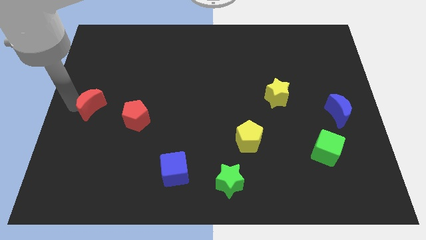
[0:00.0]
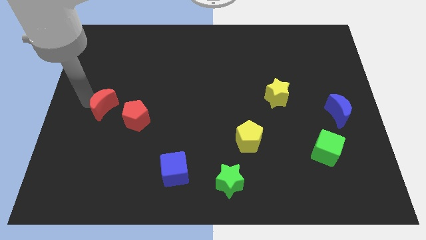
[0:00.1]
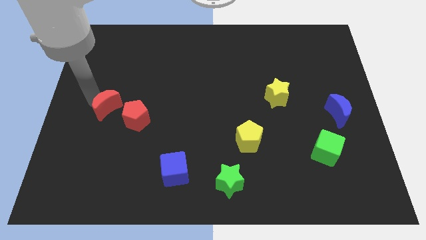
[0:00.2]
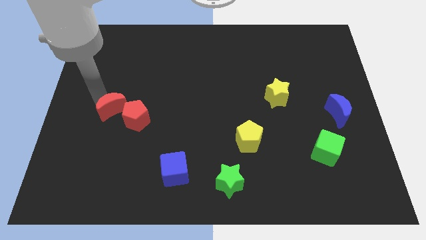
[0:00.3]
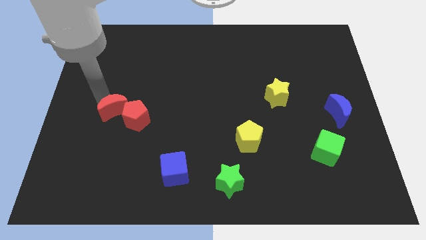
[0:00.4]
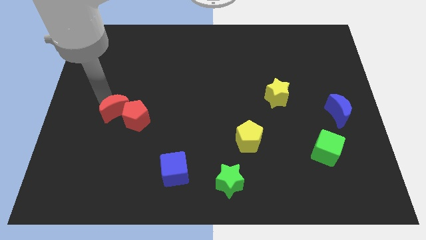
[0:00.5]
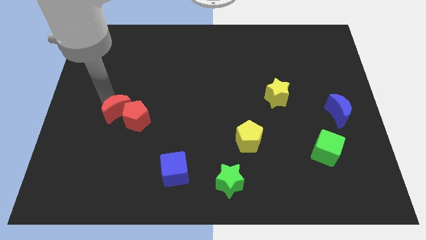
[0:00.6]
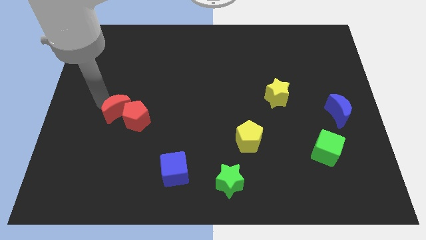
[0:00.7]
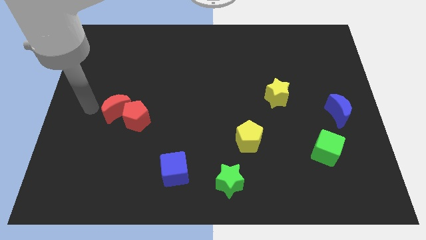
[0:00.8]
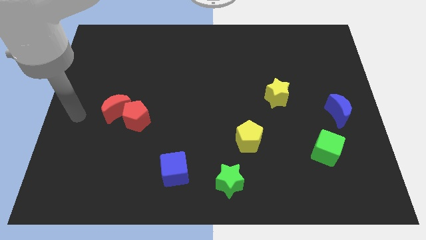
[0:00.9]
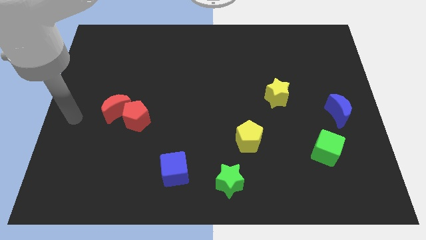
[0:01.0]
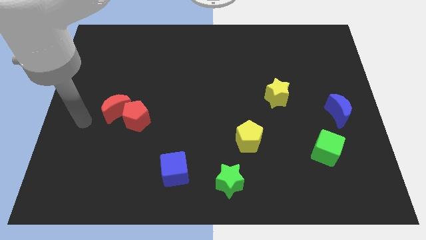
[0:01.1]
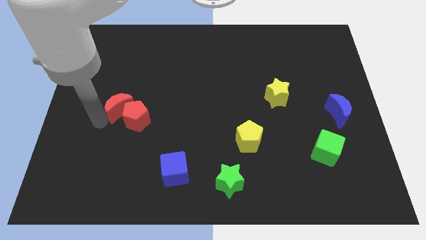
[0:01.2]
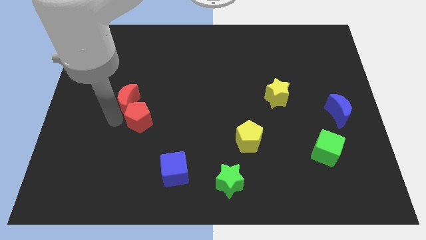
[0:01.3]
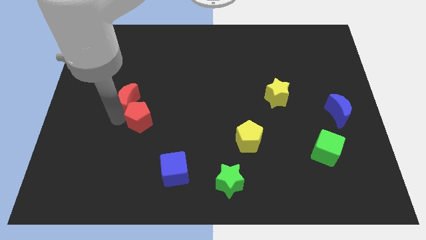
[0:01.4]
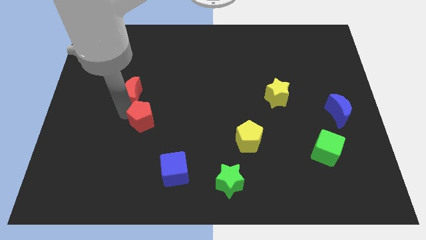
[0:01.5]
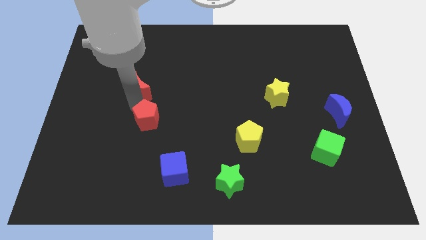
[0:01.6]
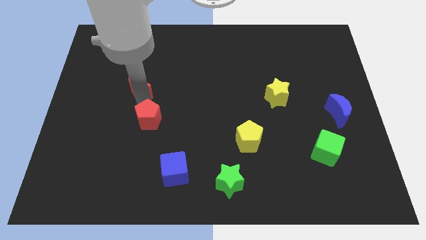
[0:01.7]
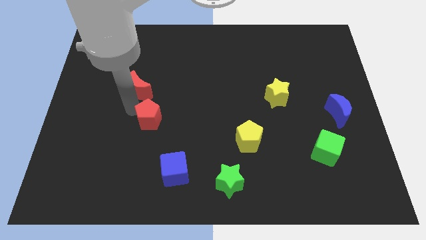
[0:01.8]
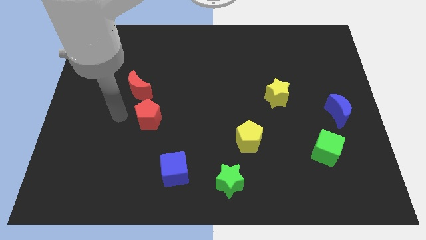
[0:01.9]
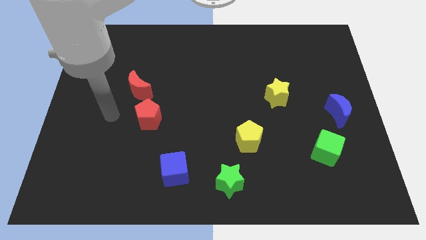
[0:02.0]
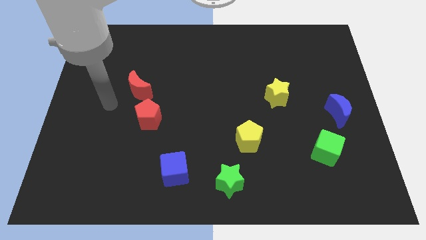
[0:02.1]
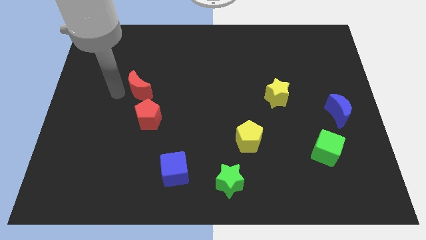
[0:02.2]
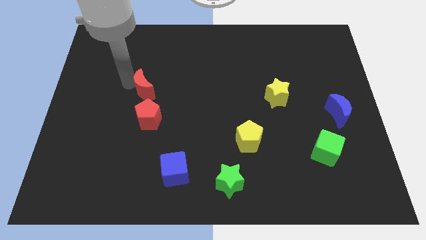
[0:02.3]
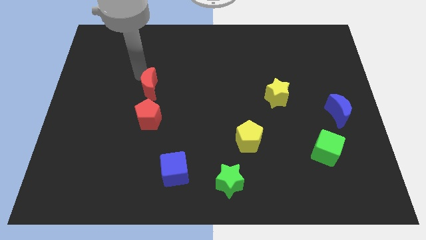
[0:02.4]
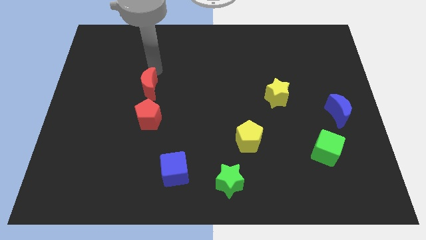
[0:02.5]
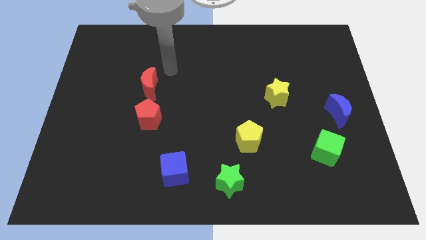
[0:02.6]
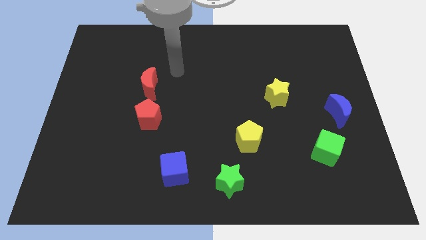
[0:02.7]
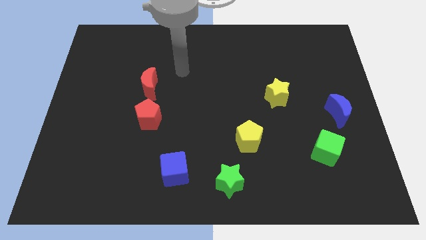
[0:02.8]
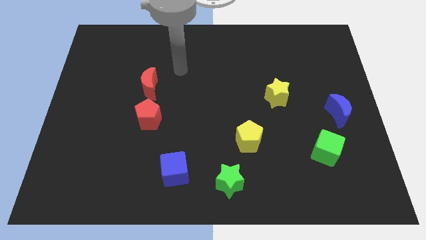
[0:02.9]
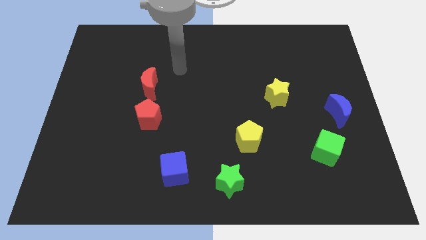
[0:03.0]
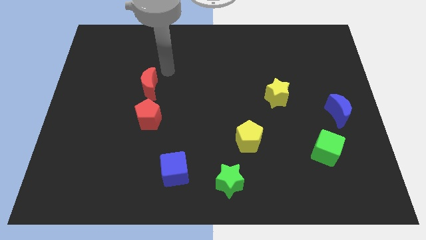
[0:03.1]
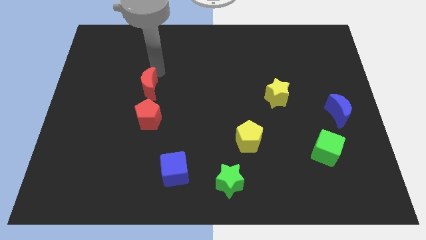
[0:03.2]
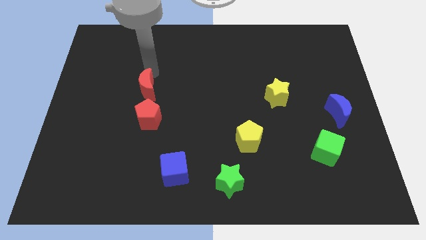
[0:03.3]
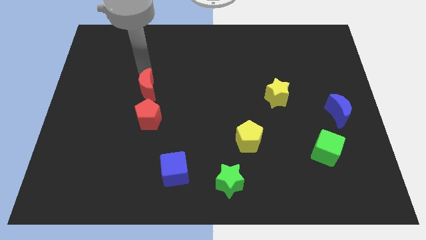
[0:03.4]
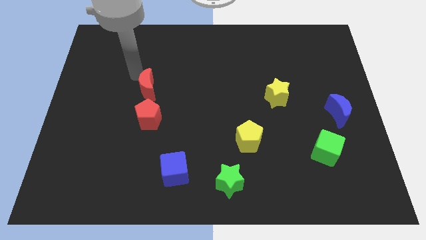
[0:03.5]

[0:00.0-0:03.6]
push the red moon into the red pentagon

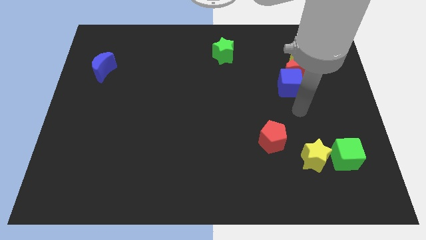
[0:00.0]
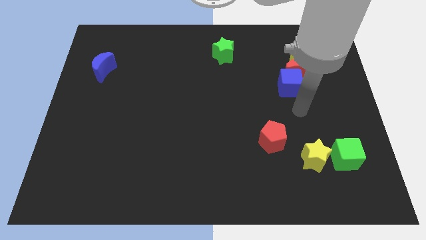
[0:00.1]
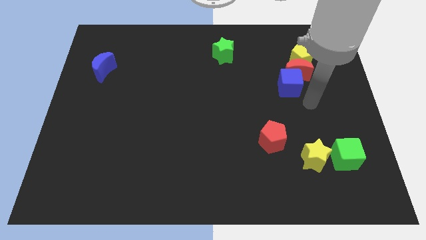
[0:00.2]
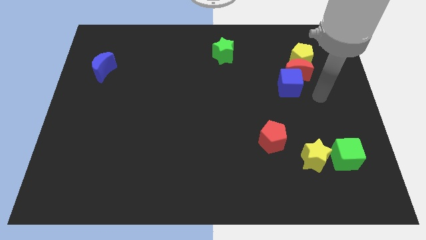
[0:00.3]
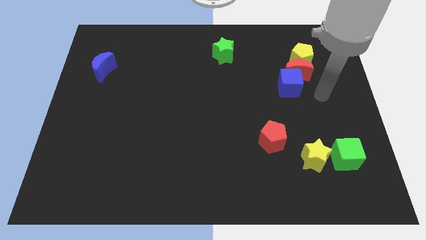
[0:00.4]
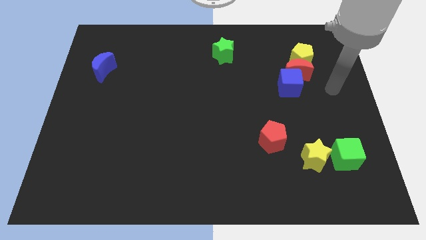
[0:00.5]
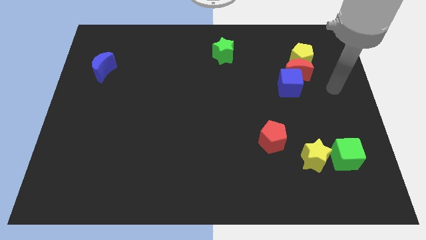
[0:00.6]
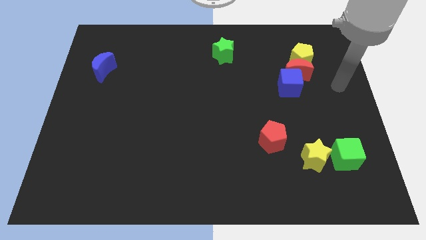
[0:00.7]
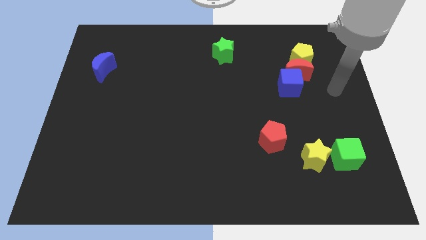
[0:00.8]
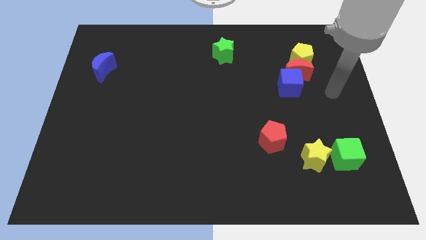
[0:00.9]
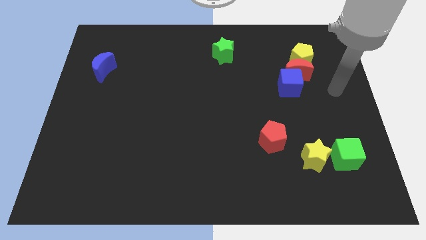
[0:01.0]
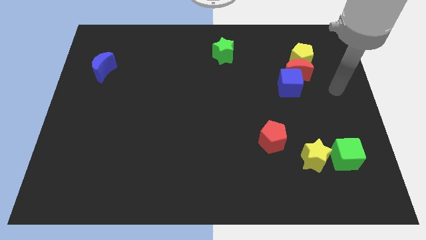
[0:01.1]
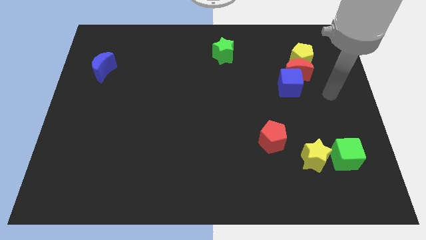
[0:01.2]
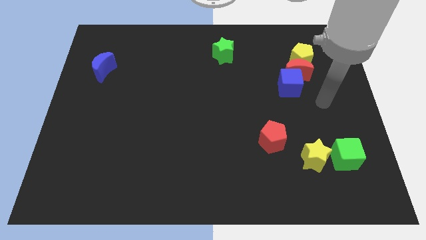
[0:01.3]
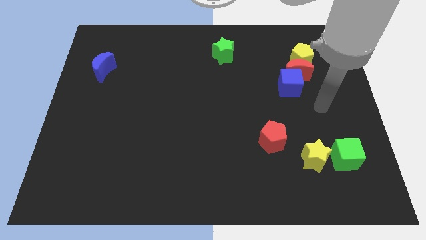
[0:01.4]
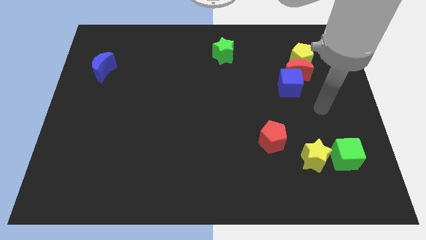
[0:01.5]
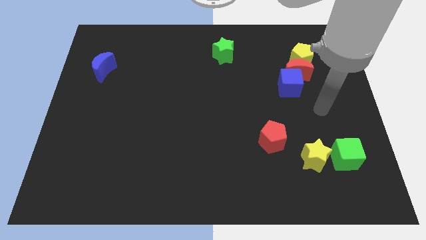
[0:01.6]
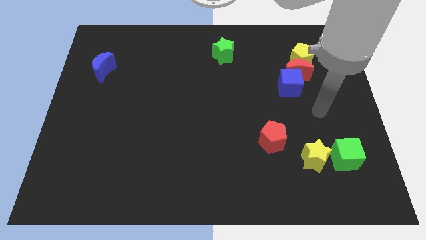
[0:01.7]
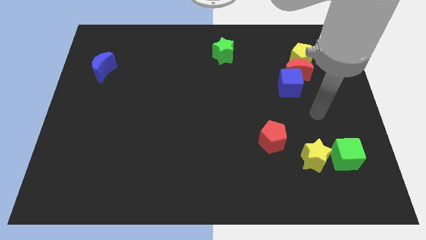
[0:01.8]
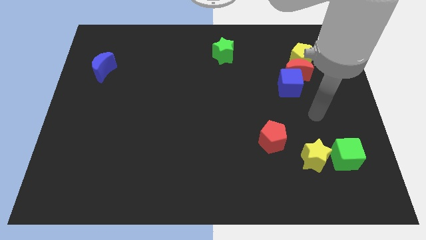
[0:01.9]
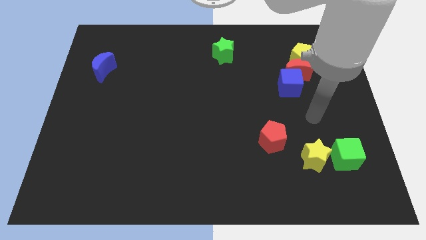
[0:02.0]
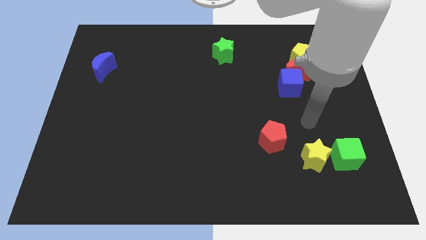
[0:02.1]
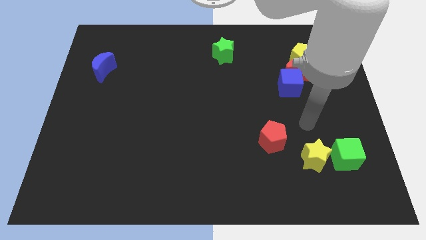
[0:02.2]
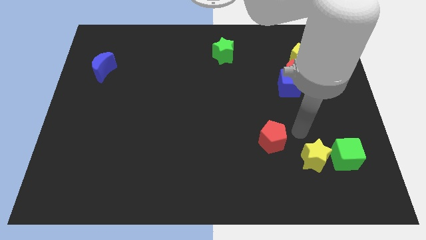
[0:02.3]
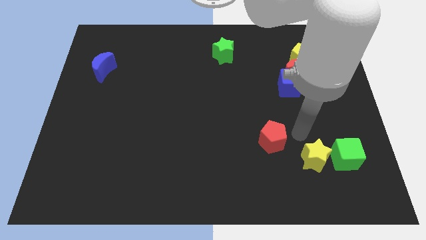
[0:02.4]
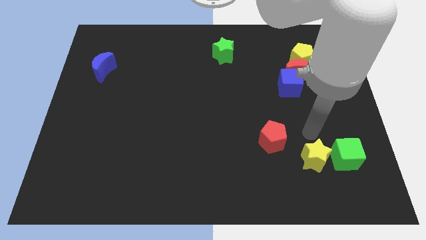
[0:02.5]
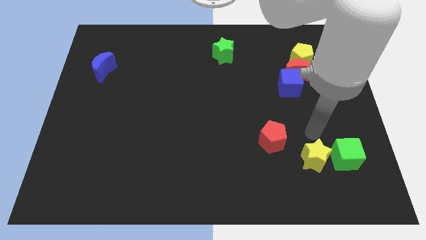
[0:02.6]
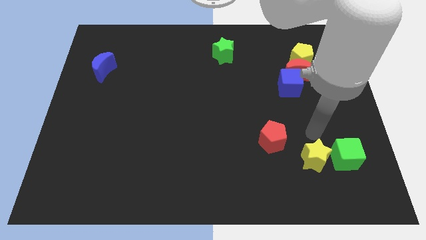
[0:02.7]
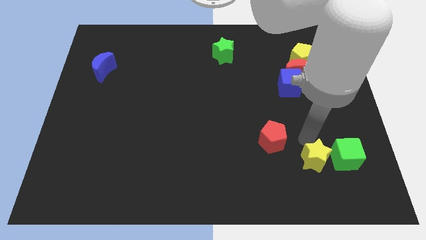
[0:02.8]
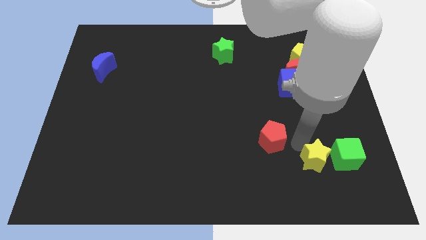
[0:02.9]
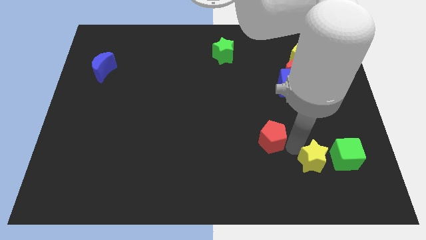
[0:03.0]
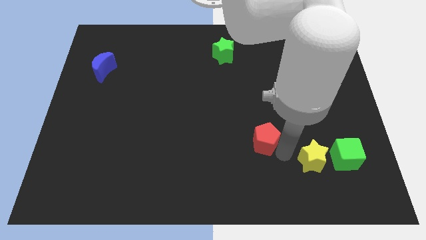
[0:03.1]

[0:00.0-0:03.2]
move your arm in between the red pentagon and yellow star

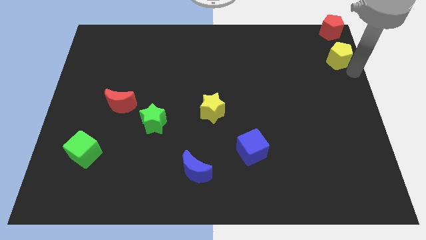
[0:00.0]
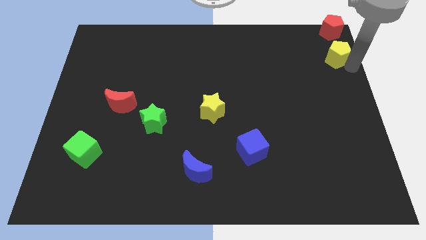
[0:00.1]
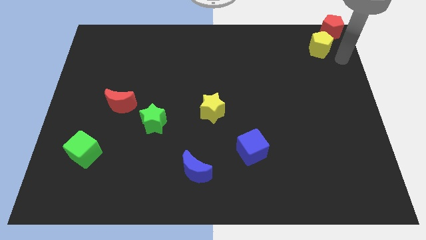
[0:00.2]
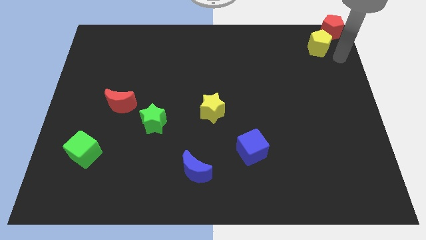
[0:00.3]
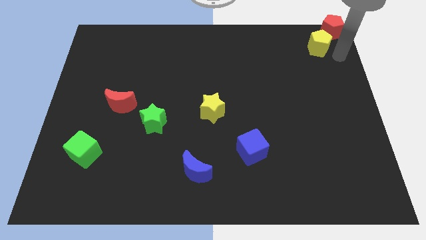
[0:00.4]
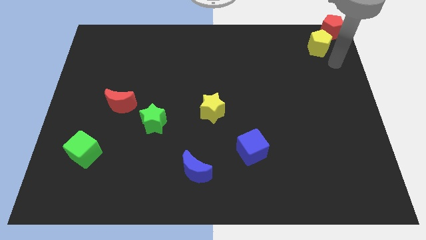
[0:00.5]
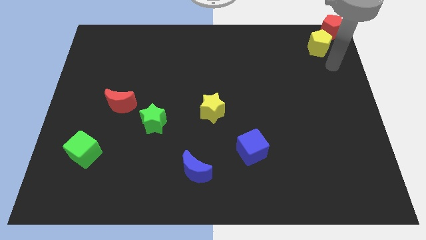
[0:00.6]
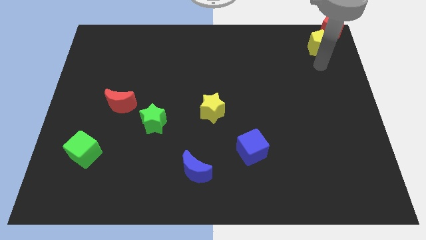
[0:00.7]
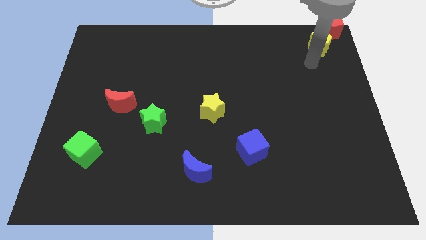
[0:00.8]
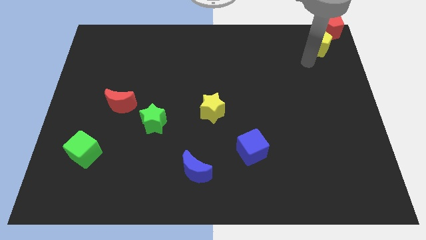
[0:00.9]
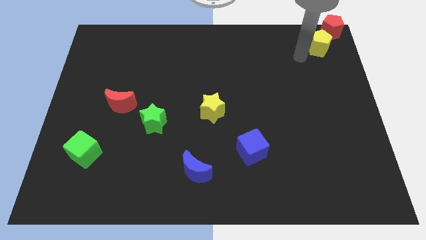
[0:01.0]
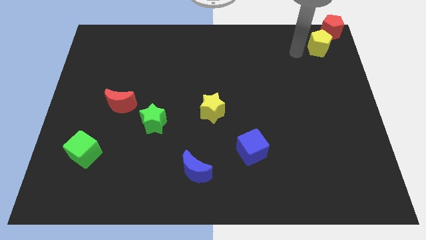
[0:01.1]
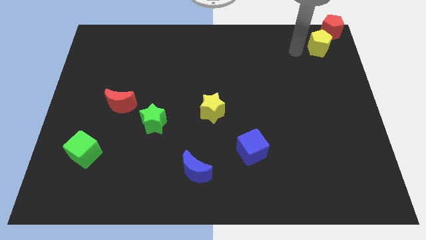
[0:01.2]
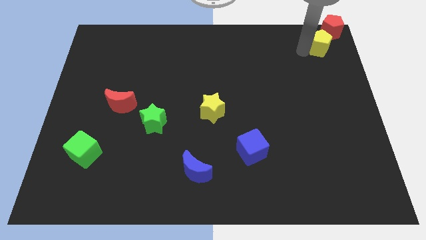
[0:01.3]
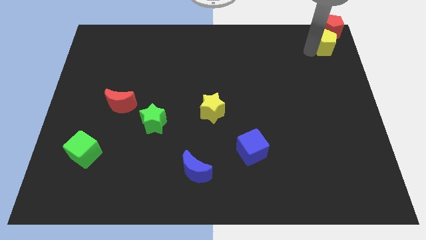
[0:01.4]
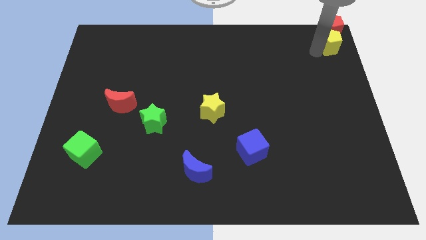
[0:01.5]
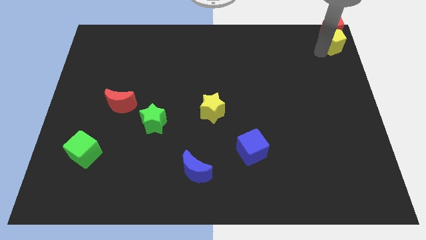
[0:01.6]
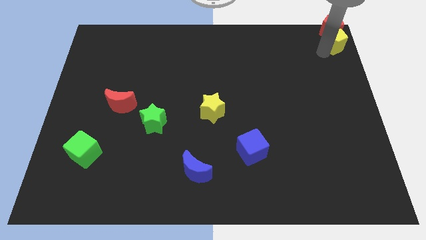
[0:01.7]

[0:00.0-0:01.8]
place the yellow pentagon at the botttom side of the red pentagon

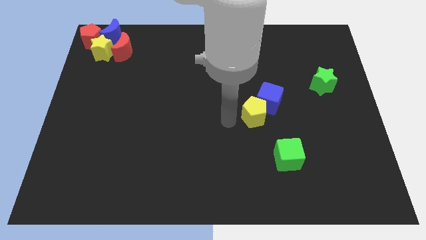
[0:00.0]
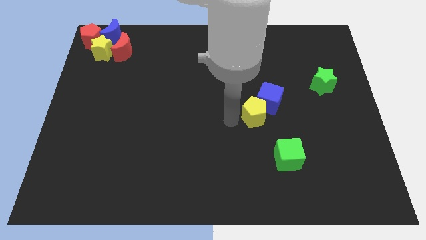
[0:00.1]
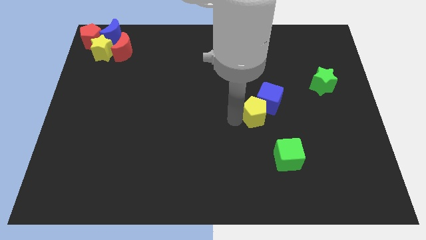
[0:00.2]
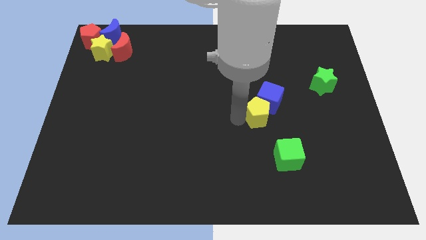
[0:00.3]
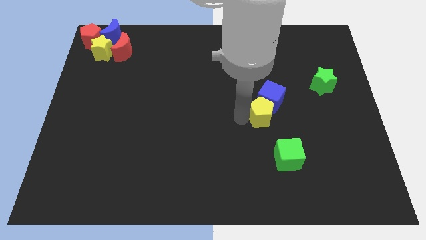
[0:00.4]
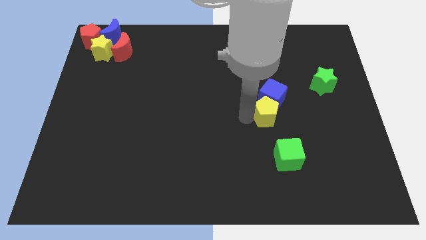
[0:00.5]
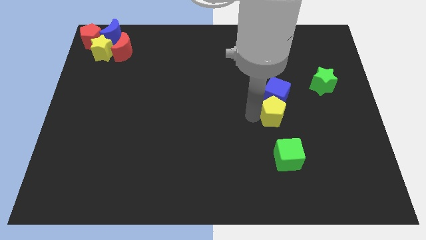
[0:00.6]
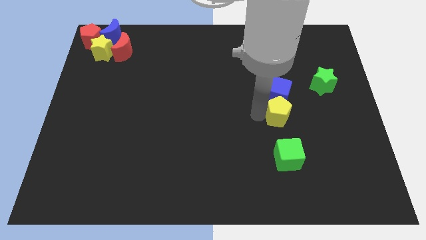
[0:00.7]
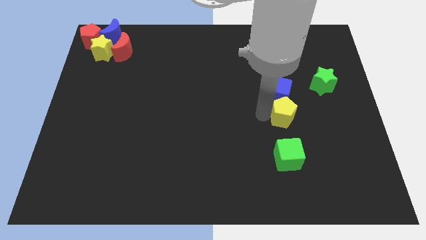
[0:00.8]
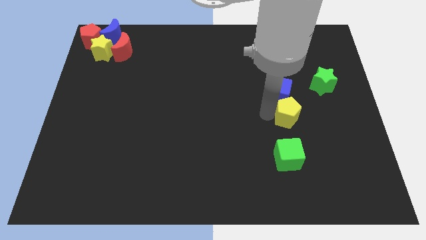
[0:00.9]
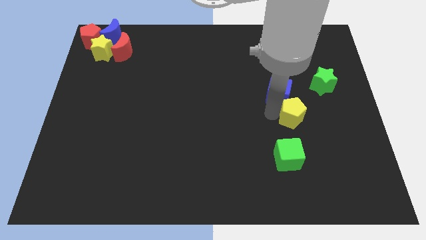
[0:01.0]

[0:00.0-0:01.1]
push the yellow pentagon to the top of the green cube
